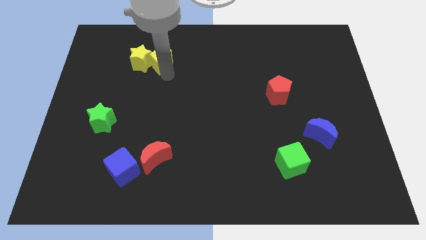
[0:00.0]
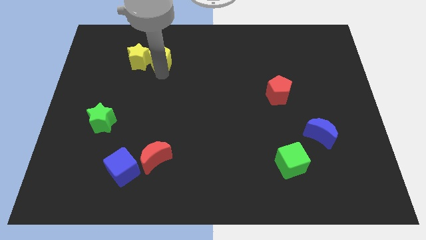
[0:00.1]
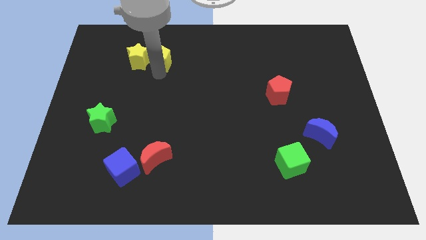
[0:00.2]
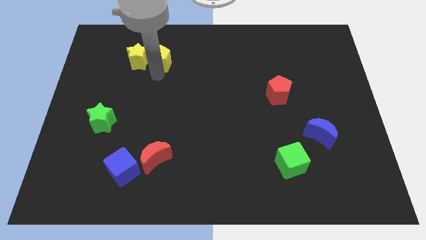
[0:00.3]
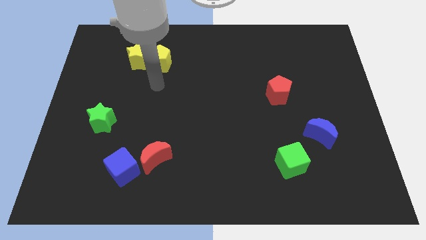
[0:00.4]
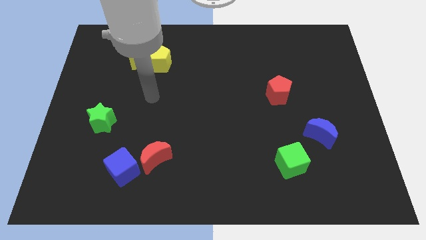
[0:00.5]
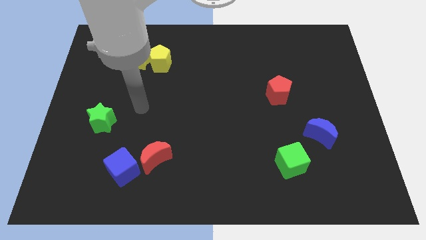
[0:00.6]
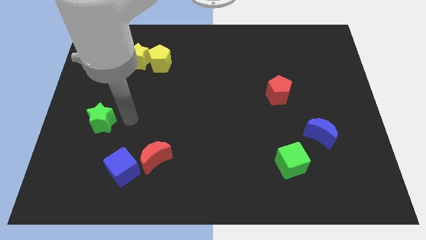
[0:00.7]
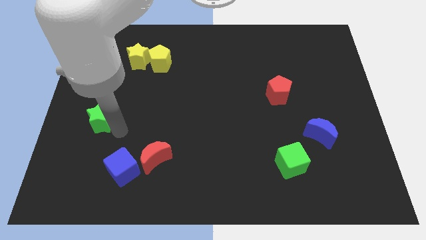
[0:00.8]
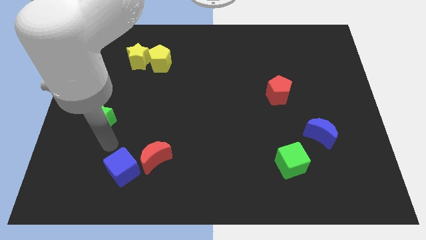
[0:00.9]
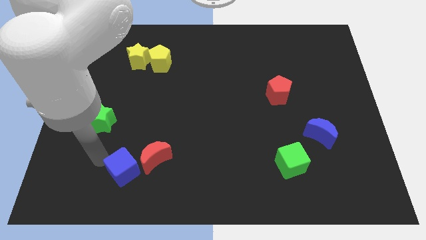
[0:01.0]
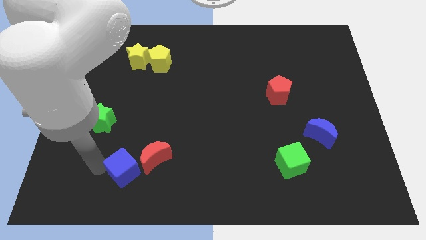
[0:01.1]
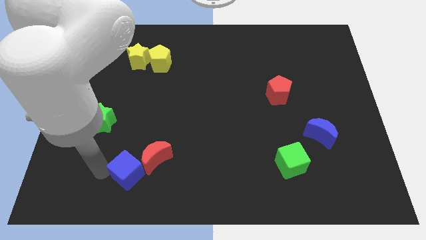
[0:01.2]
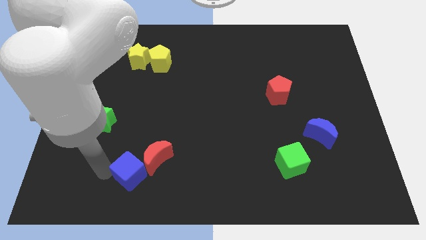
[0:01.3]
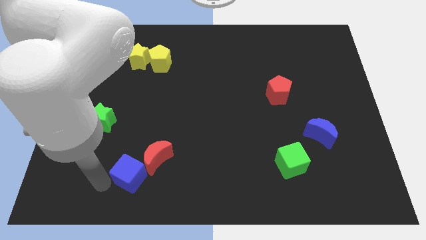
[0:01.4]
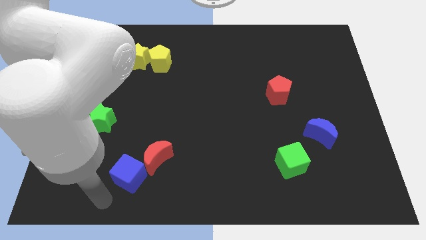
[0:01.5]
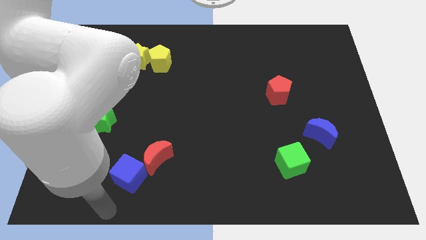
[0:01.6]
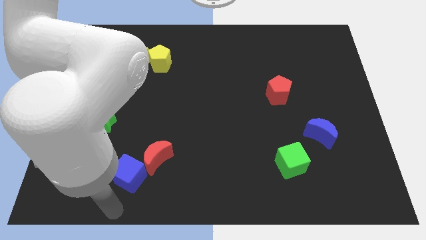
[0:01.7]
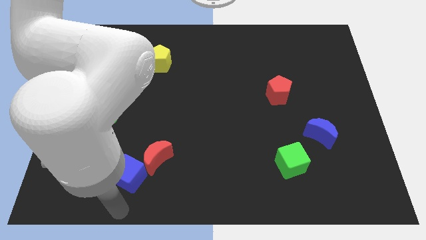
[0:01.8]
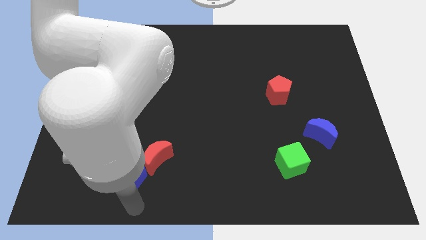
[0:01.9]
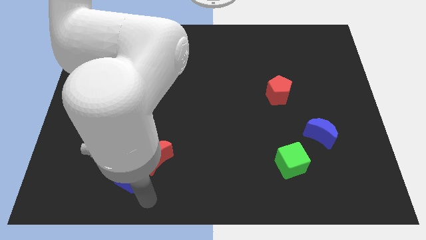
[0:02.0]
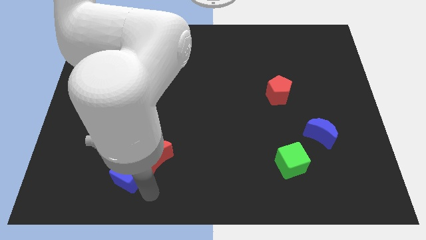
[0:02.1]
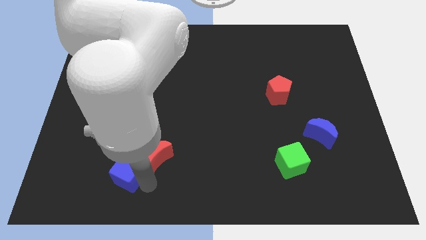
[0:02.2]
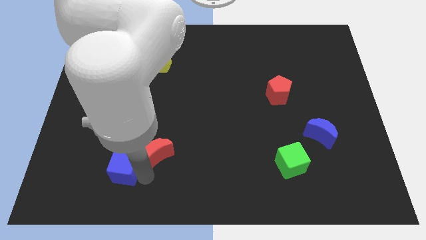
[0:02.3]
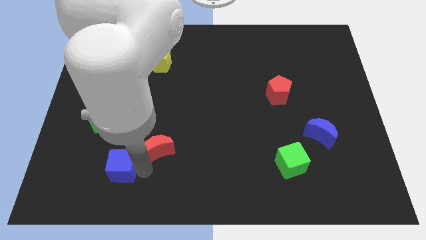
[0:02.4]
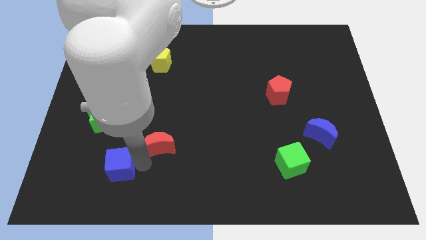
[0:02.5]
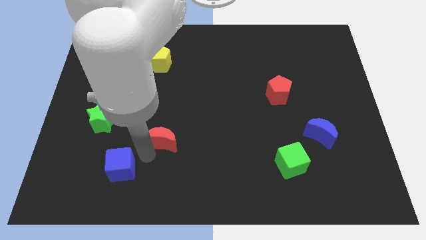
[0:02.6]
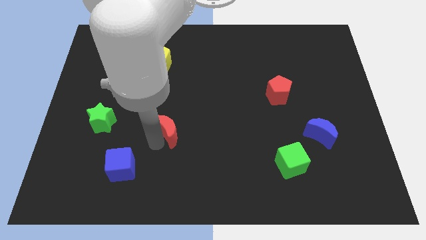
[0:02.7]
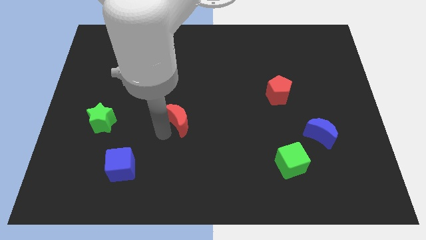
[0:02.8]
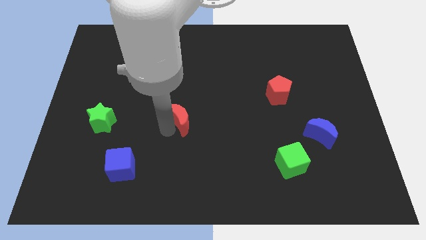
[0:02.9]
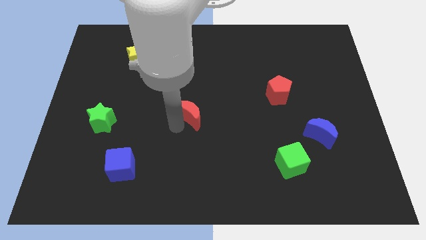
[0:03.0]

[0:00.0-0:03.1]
move the red moon right to the green star

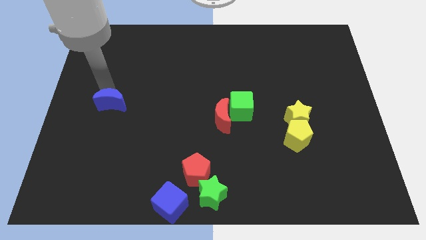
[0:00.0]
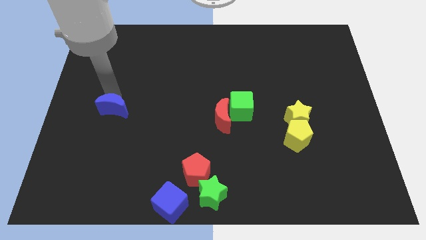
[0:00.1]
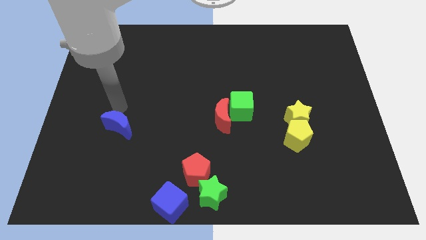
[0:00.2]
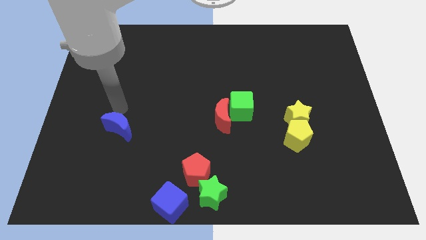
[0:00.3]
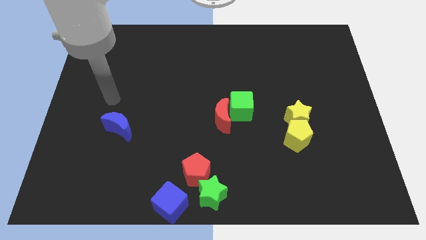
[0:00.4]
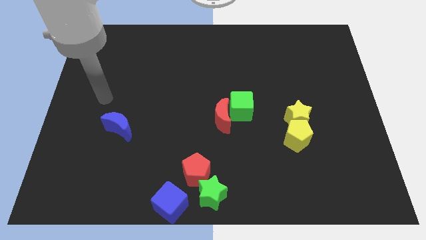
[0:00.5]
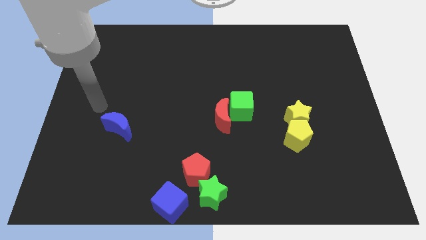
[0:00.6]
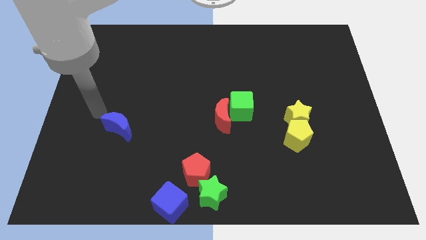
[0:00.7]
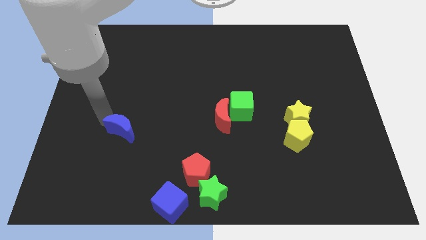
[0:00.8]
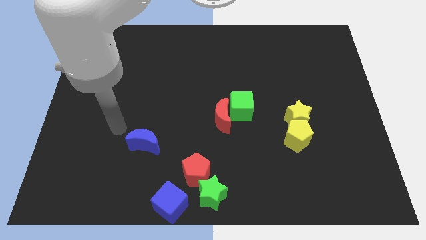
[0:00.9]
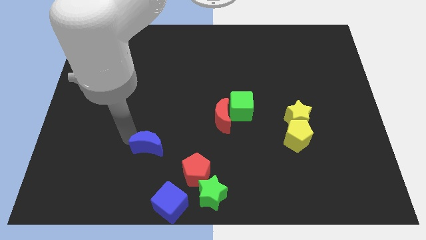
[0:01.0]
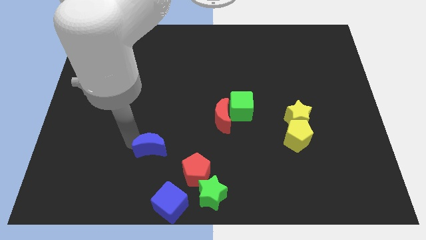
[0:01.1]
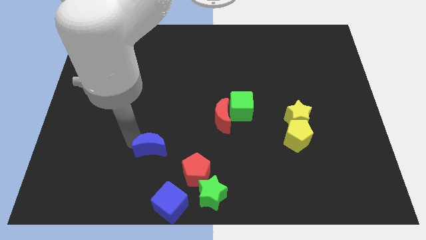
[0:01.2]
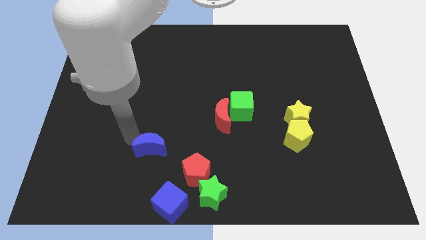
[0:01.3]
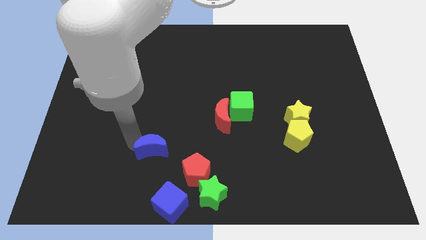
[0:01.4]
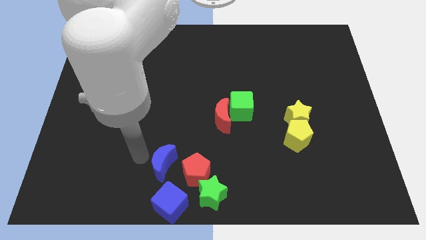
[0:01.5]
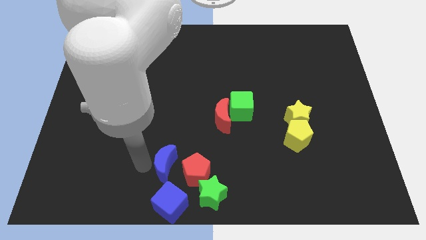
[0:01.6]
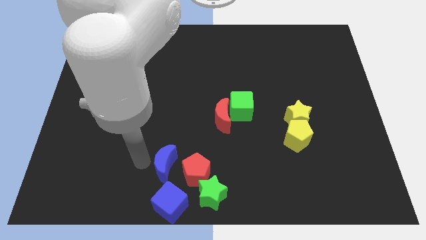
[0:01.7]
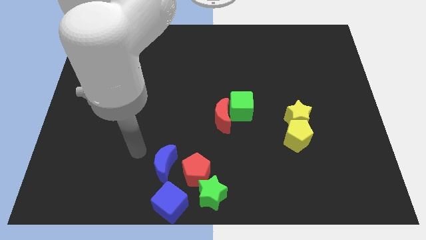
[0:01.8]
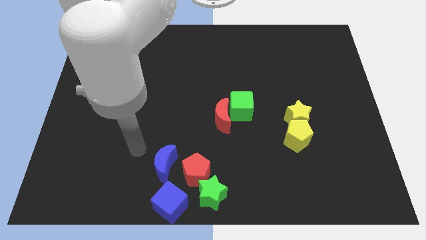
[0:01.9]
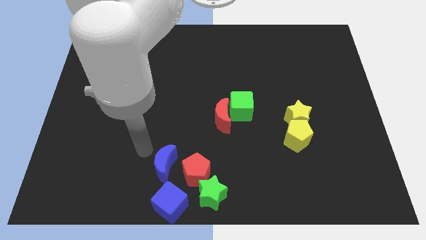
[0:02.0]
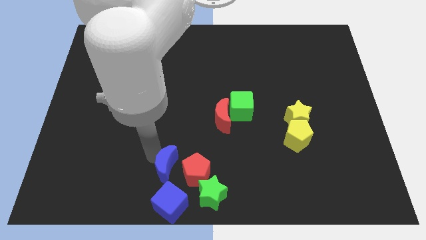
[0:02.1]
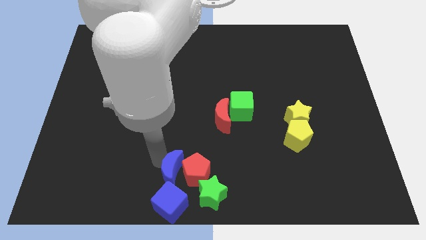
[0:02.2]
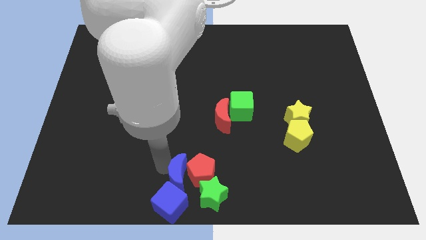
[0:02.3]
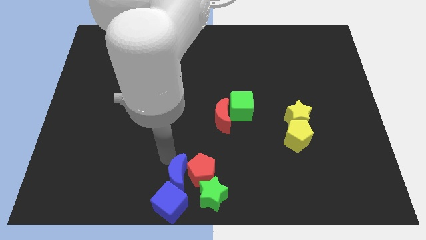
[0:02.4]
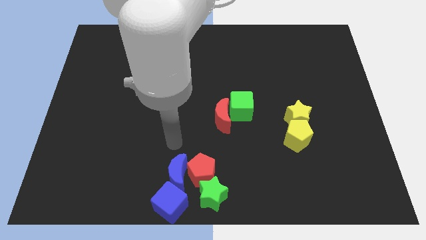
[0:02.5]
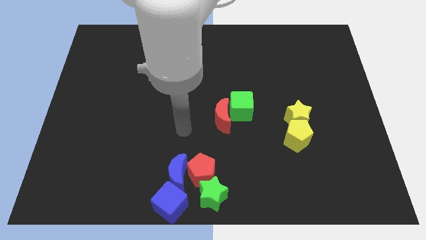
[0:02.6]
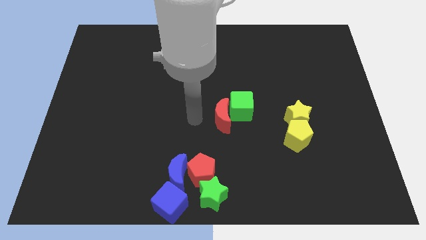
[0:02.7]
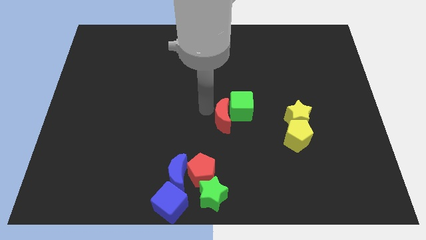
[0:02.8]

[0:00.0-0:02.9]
move the blue crescent into the red pentagon

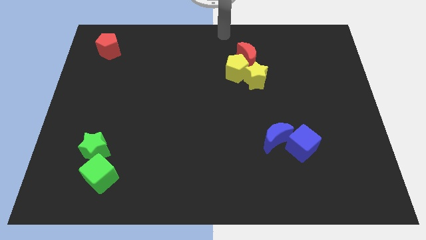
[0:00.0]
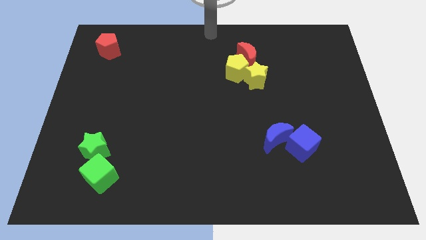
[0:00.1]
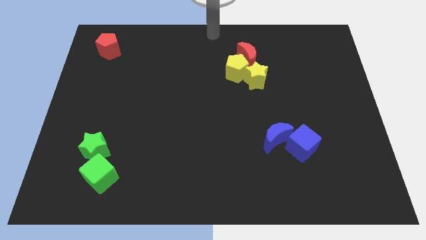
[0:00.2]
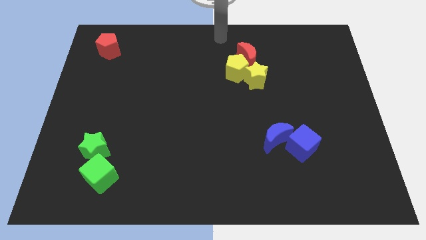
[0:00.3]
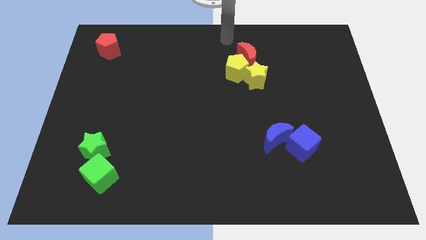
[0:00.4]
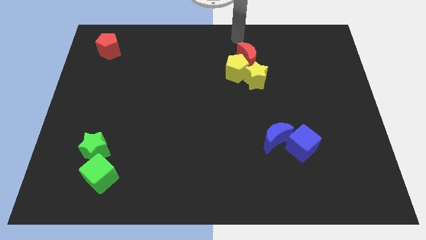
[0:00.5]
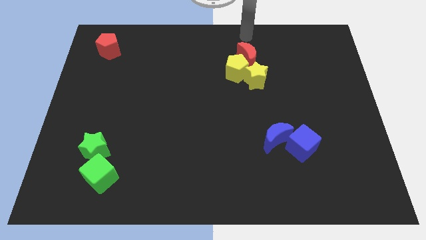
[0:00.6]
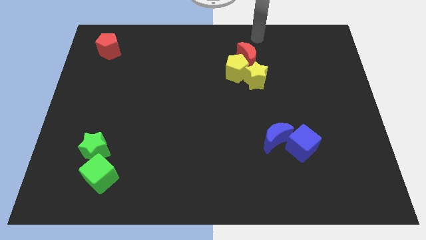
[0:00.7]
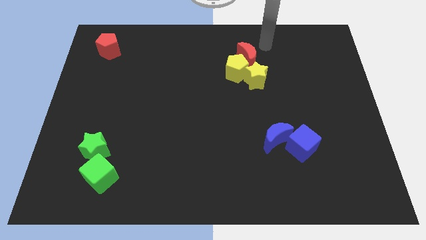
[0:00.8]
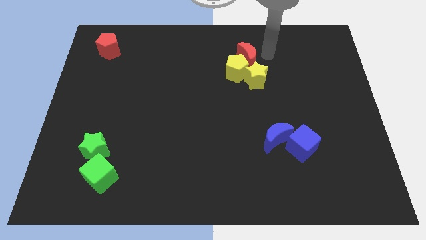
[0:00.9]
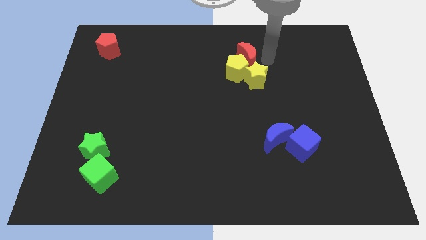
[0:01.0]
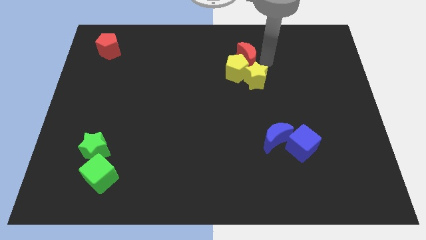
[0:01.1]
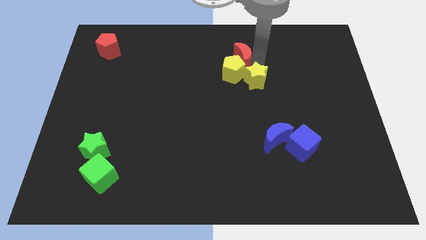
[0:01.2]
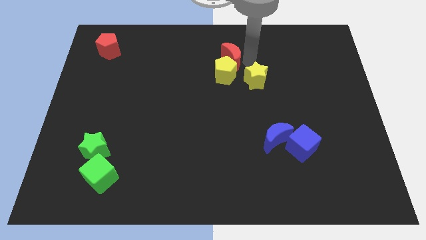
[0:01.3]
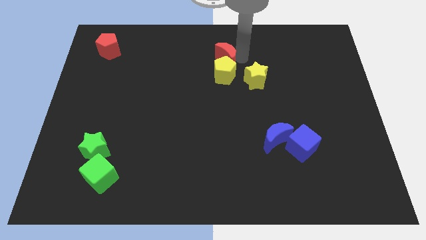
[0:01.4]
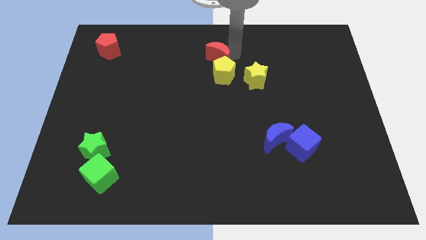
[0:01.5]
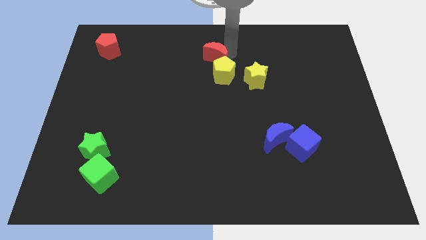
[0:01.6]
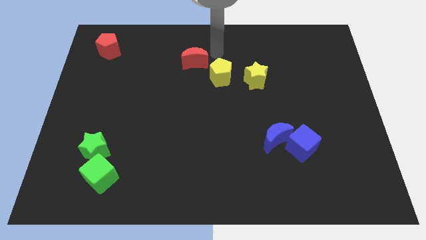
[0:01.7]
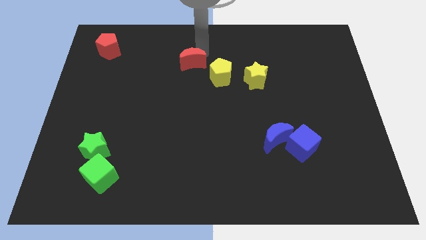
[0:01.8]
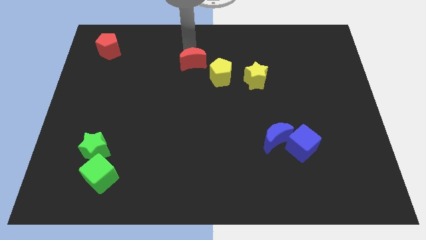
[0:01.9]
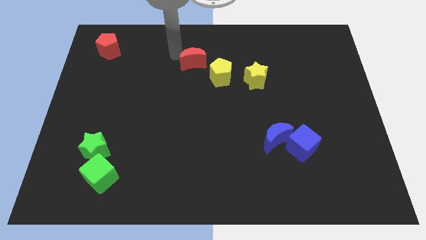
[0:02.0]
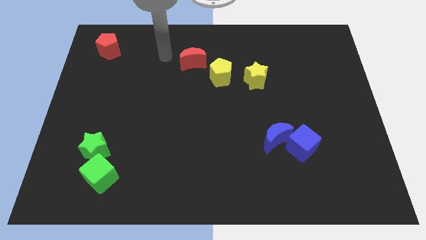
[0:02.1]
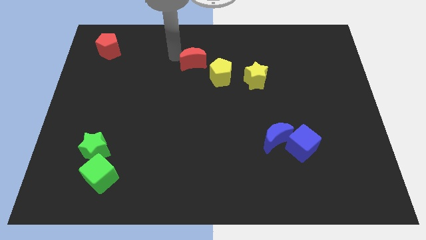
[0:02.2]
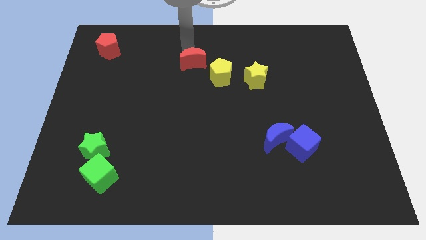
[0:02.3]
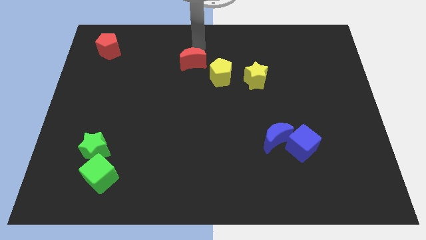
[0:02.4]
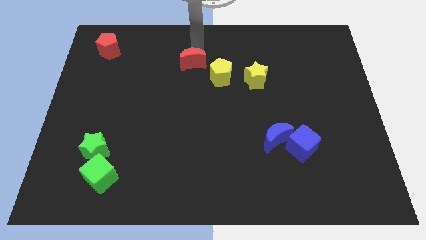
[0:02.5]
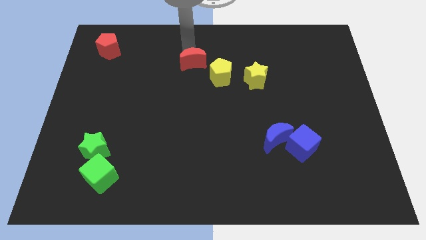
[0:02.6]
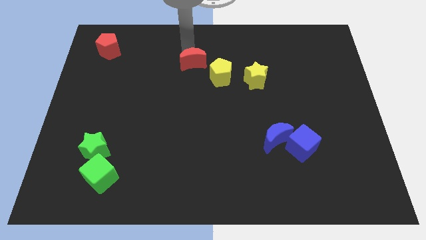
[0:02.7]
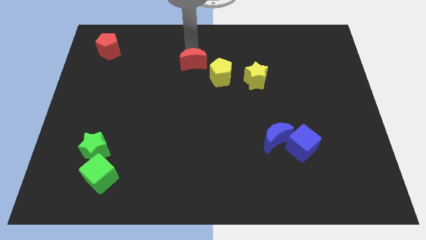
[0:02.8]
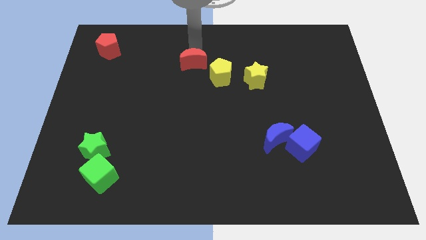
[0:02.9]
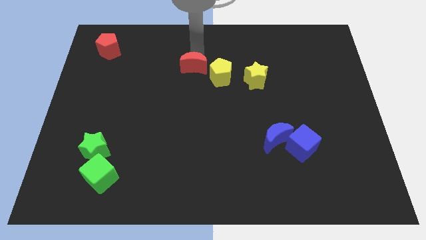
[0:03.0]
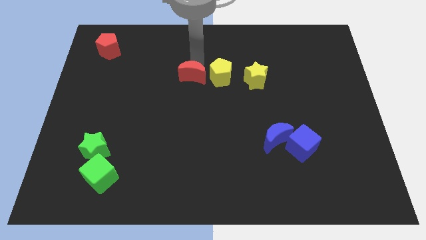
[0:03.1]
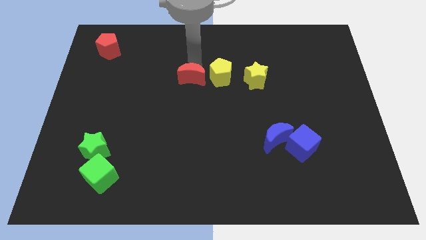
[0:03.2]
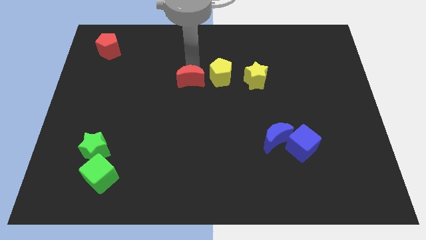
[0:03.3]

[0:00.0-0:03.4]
make a horizontal line out of yellow blocks and the red crescent
